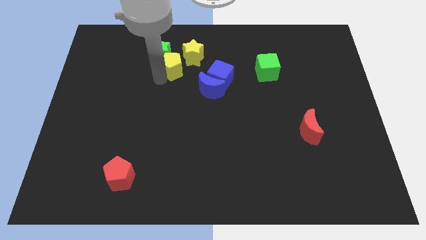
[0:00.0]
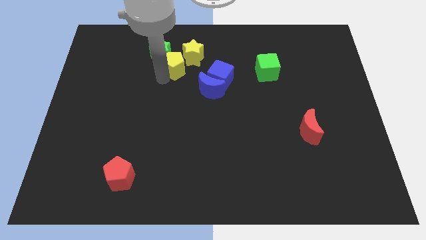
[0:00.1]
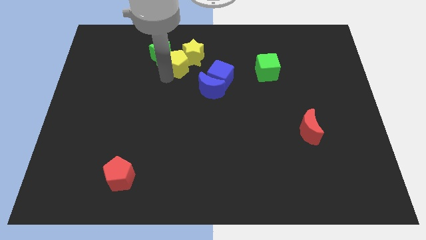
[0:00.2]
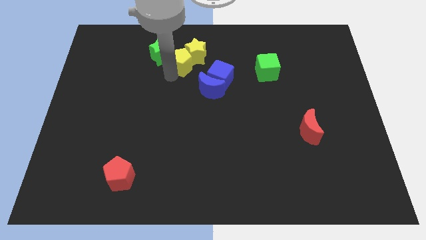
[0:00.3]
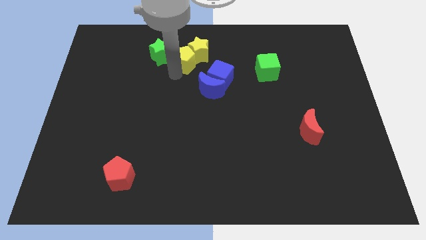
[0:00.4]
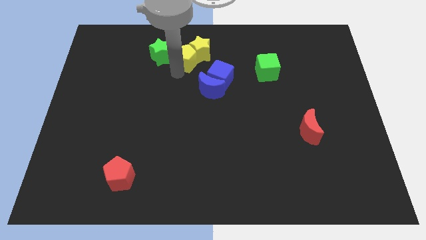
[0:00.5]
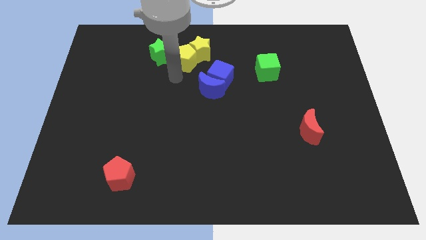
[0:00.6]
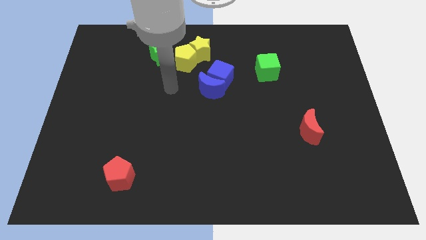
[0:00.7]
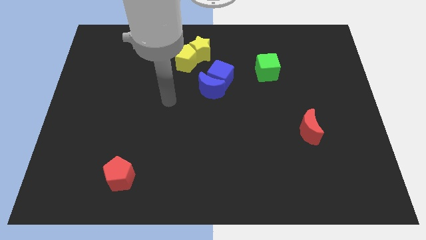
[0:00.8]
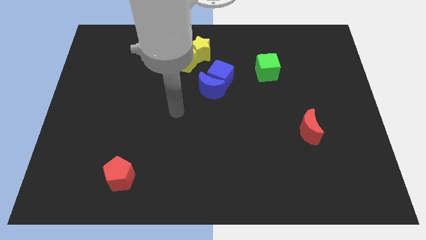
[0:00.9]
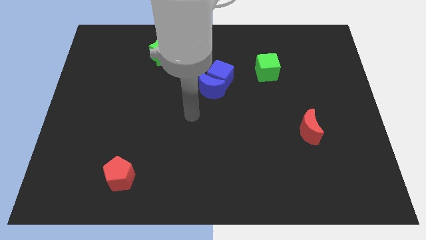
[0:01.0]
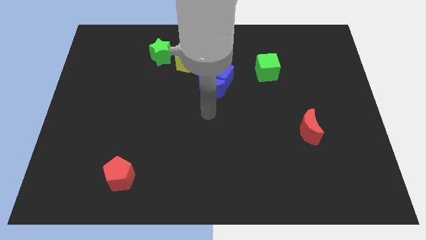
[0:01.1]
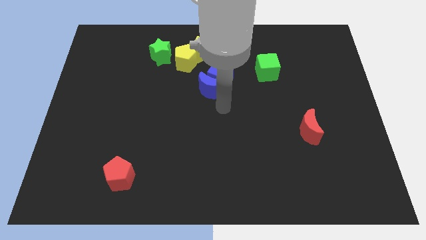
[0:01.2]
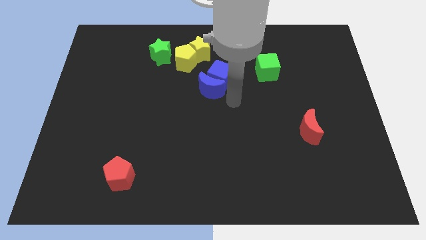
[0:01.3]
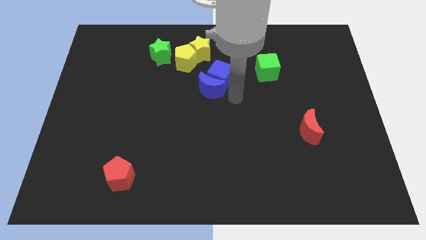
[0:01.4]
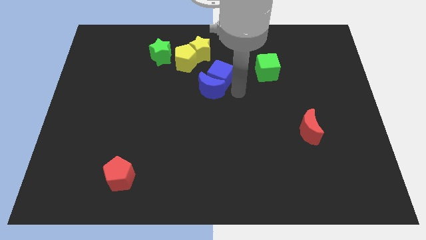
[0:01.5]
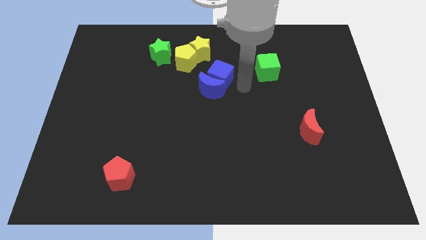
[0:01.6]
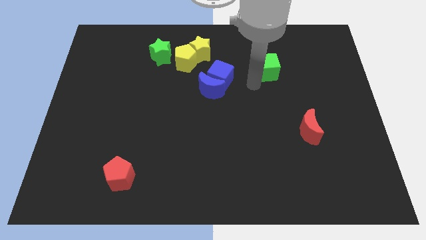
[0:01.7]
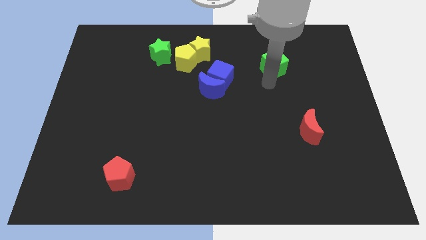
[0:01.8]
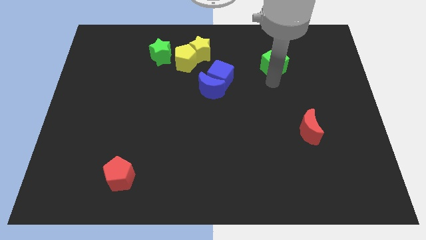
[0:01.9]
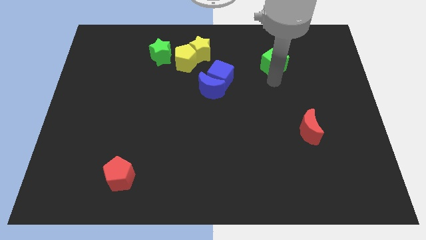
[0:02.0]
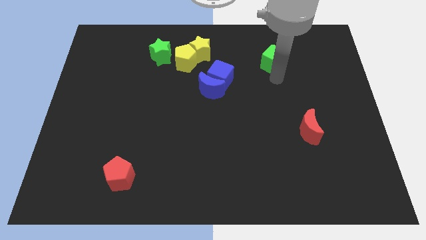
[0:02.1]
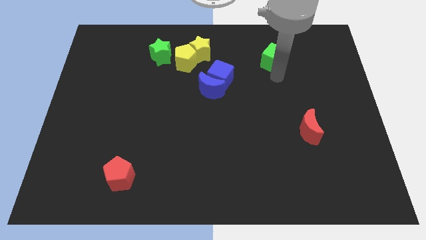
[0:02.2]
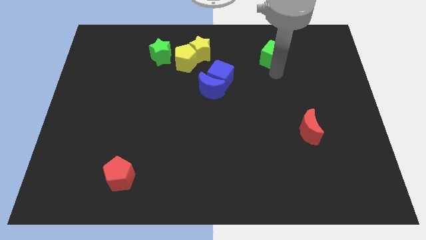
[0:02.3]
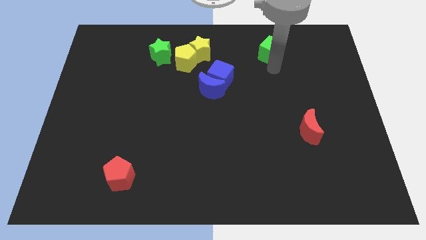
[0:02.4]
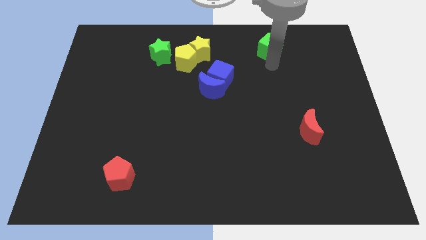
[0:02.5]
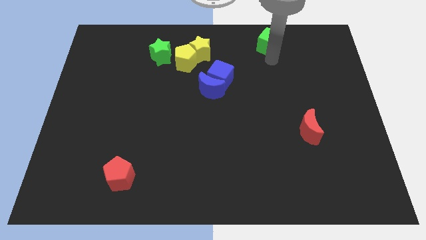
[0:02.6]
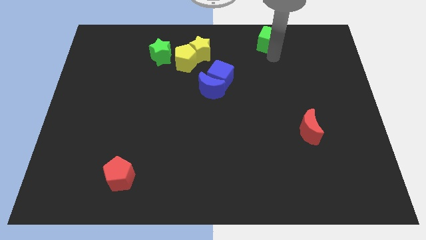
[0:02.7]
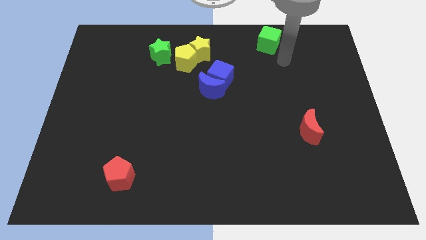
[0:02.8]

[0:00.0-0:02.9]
move your arm towards the green cube

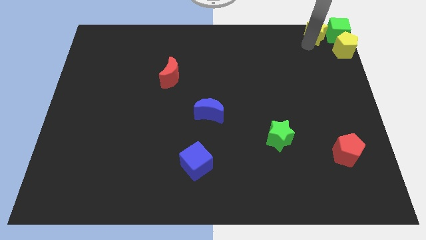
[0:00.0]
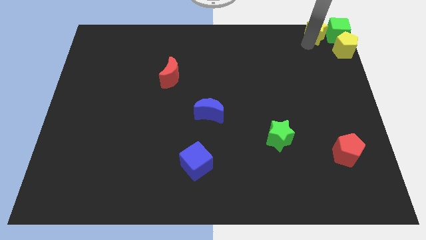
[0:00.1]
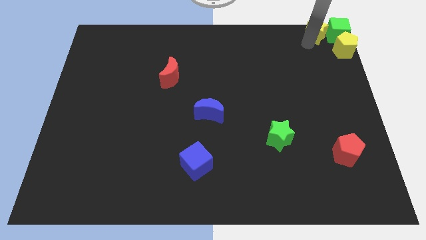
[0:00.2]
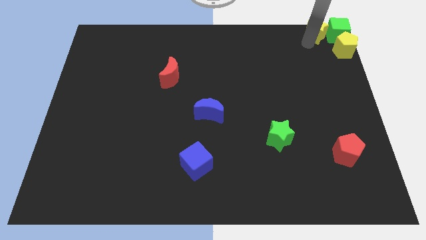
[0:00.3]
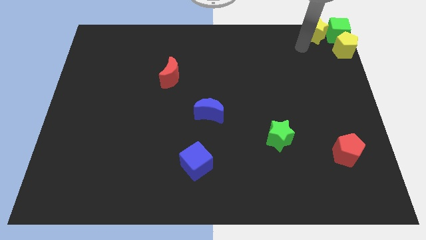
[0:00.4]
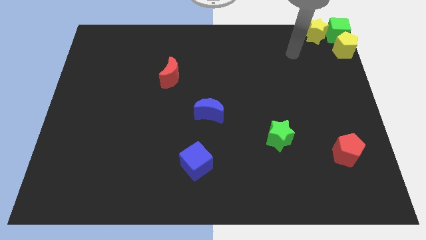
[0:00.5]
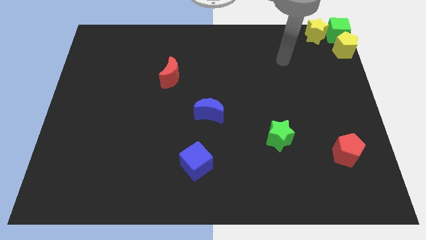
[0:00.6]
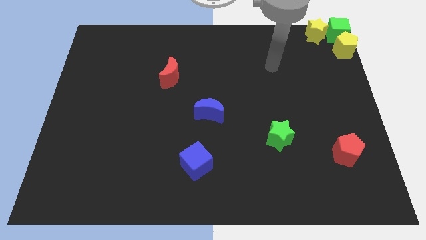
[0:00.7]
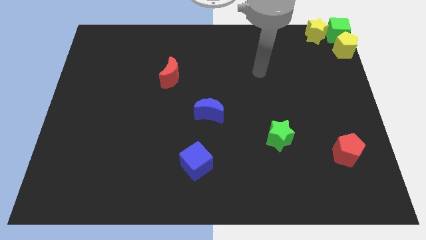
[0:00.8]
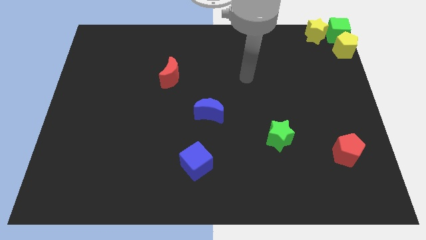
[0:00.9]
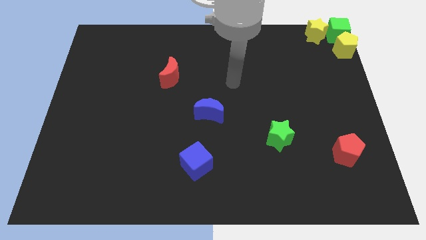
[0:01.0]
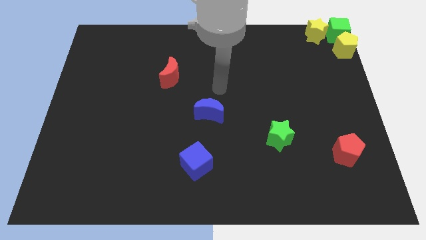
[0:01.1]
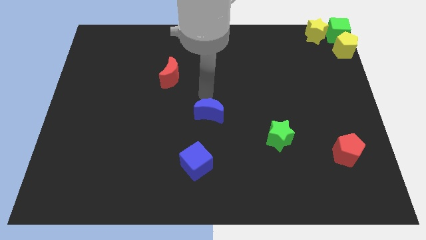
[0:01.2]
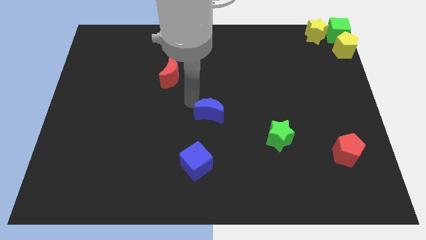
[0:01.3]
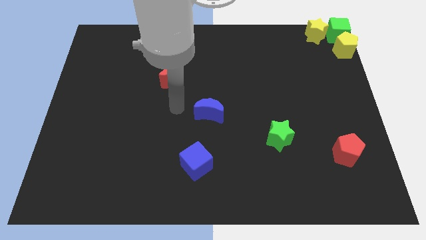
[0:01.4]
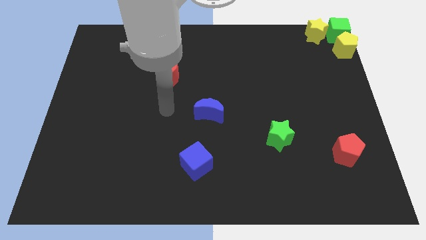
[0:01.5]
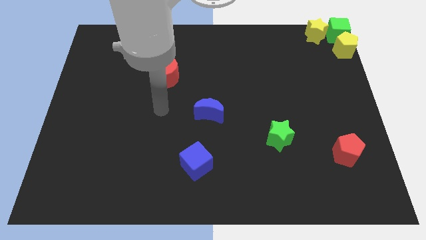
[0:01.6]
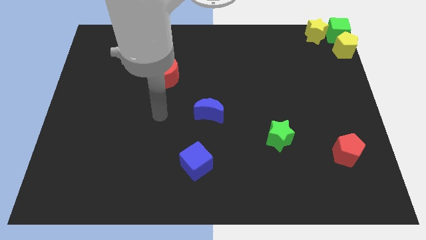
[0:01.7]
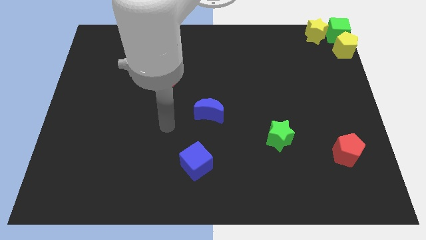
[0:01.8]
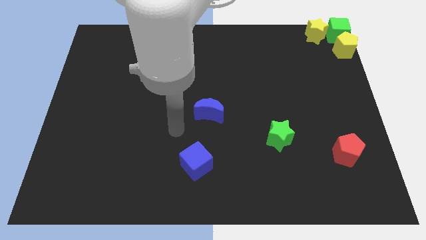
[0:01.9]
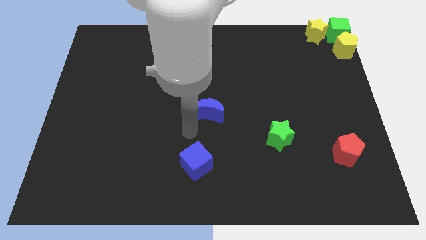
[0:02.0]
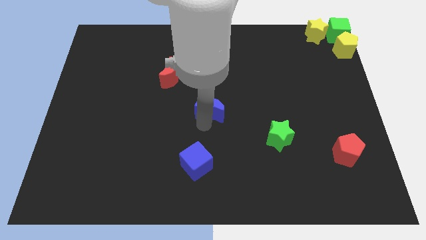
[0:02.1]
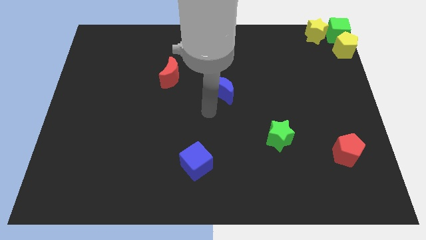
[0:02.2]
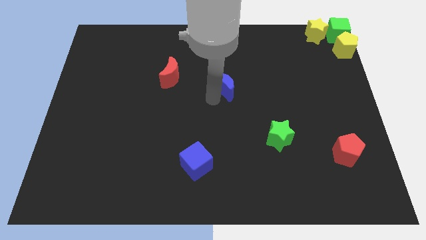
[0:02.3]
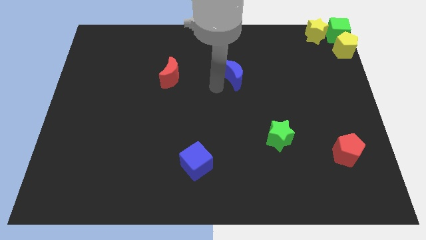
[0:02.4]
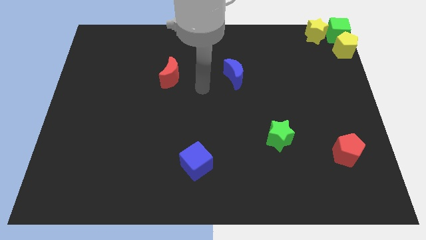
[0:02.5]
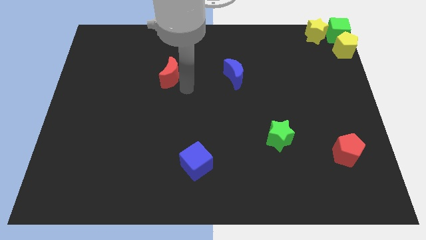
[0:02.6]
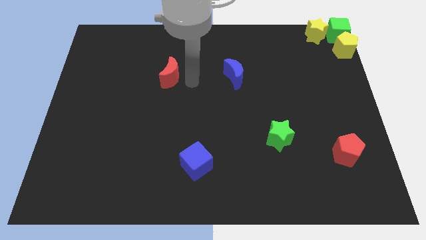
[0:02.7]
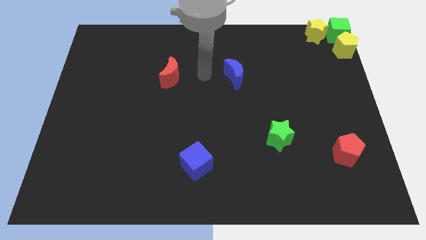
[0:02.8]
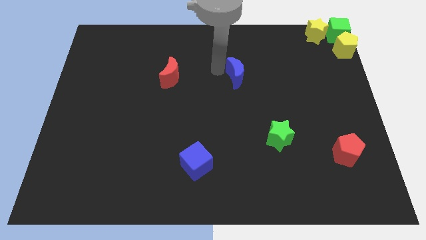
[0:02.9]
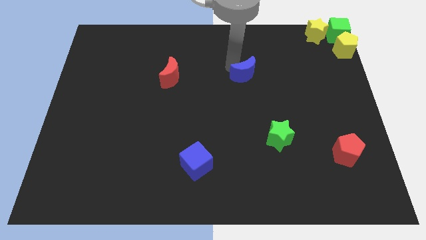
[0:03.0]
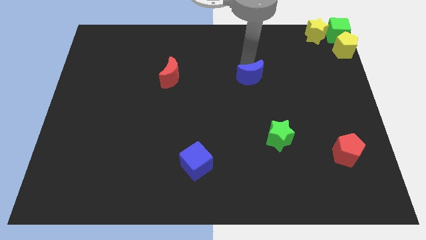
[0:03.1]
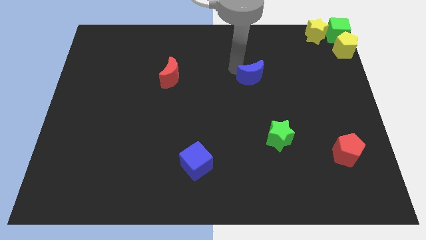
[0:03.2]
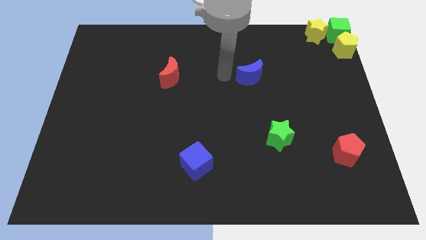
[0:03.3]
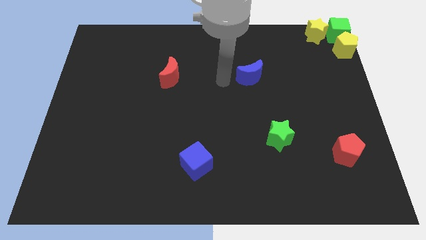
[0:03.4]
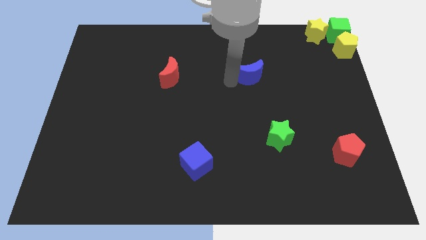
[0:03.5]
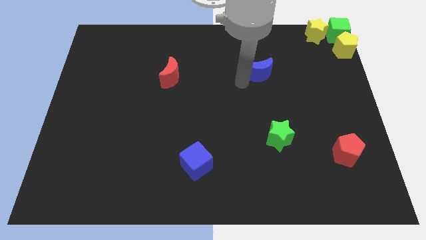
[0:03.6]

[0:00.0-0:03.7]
move the blue crescent towards the right side

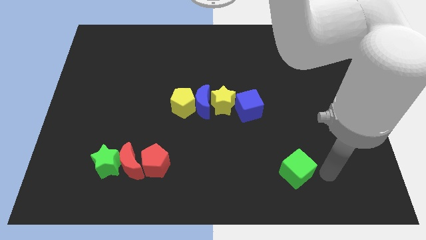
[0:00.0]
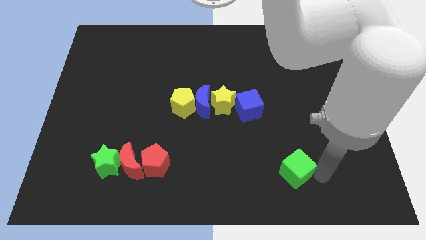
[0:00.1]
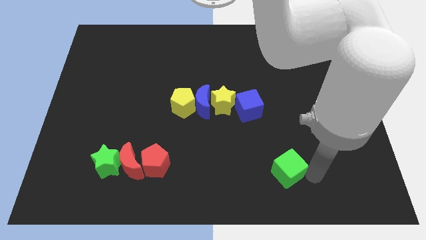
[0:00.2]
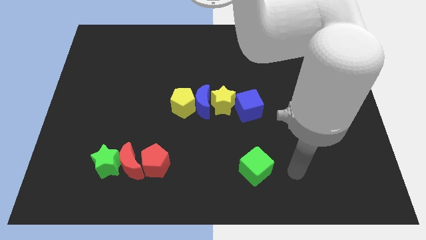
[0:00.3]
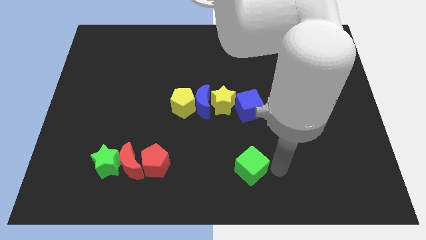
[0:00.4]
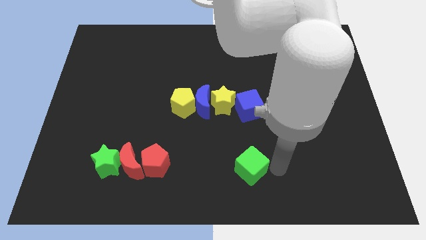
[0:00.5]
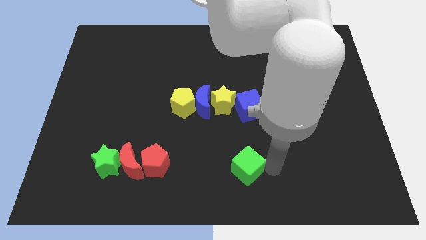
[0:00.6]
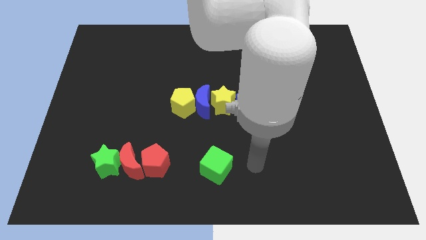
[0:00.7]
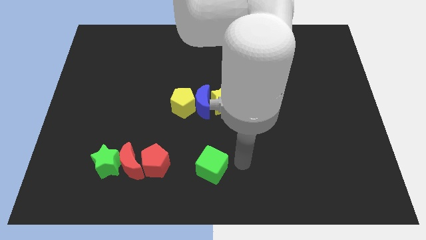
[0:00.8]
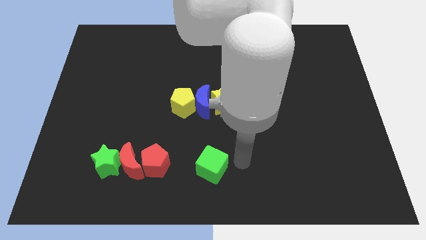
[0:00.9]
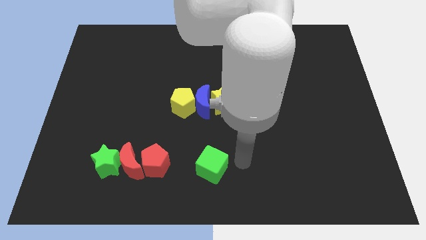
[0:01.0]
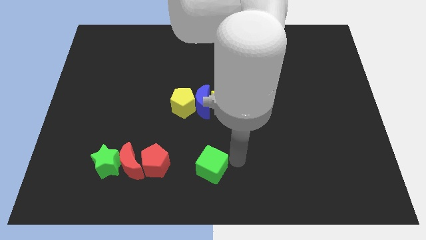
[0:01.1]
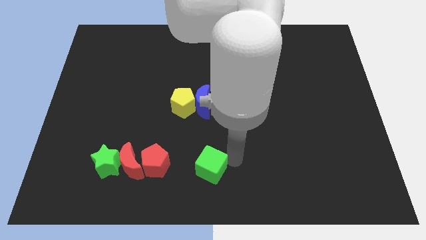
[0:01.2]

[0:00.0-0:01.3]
move the green cube to the left

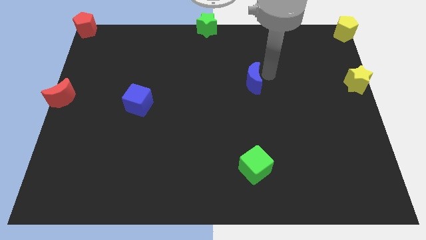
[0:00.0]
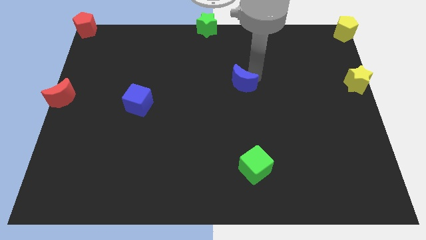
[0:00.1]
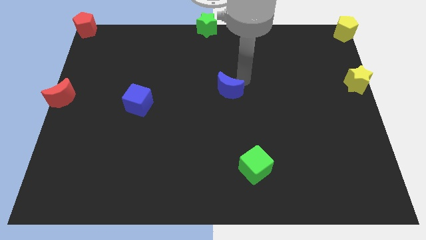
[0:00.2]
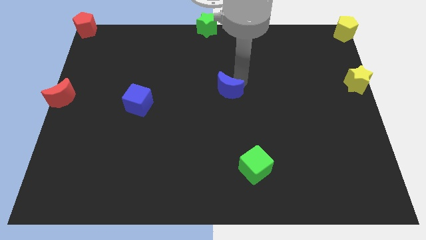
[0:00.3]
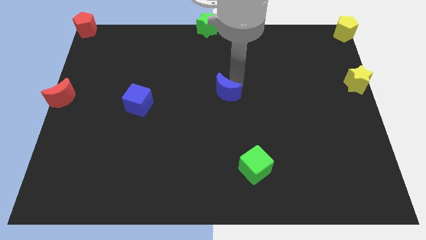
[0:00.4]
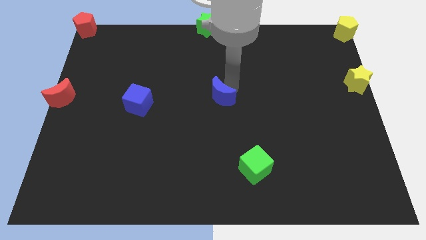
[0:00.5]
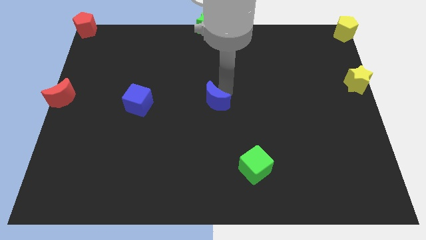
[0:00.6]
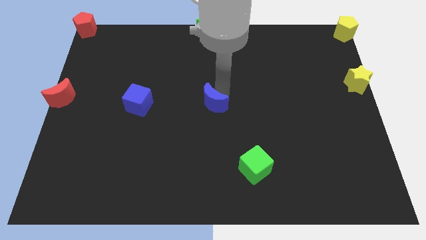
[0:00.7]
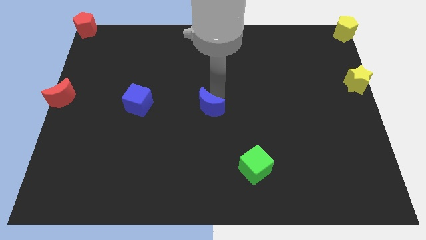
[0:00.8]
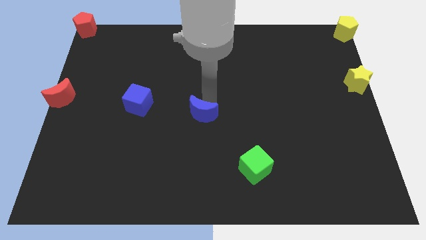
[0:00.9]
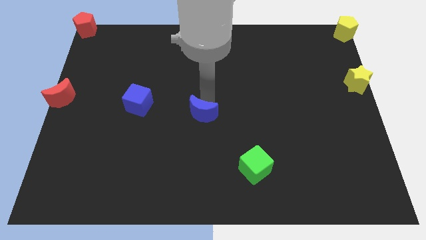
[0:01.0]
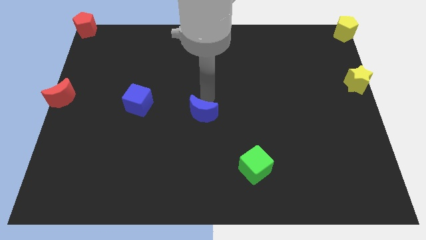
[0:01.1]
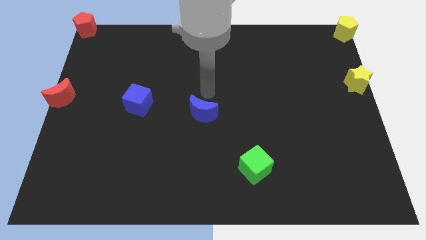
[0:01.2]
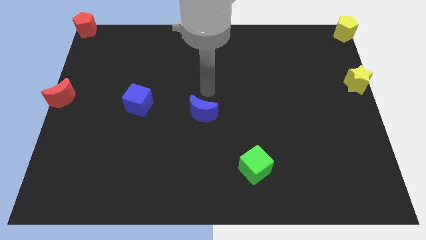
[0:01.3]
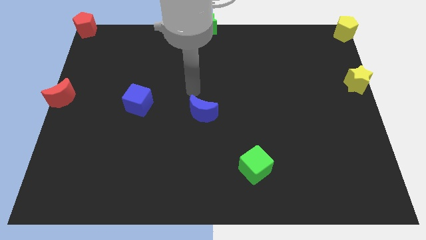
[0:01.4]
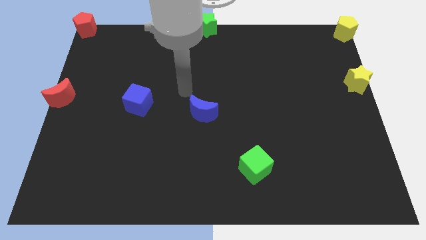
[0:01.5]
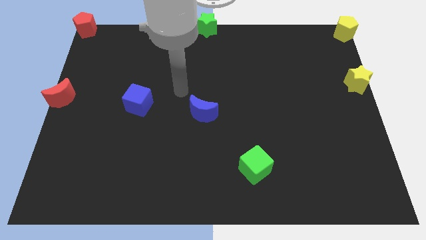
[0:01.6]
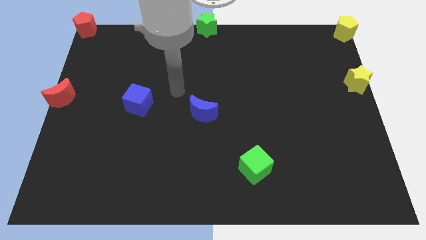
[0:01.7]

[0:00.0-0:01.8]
move the blue crescent to the center of the board
